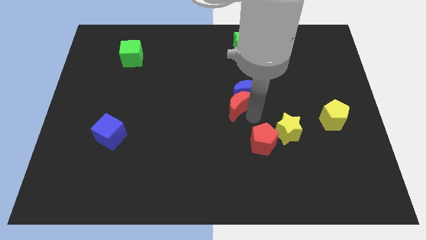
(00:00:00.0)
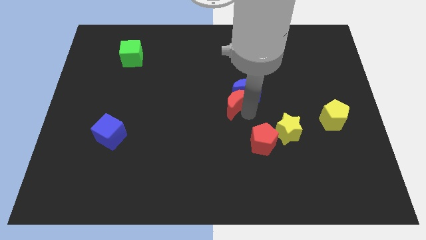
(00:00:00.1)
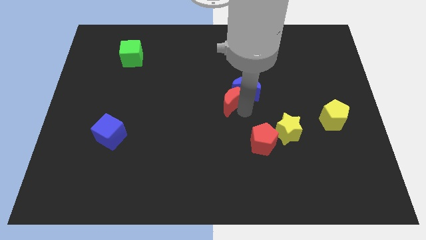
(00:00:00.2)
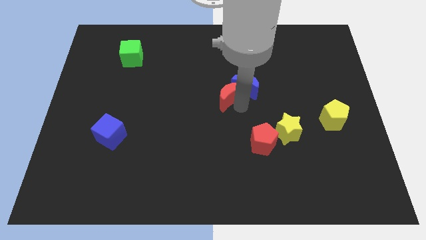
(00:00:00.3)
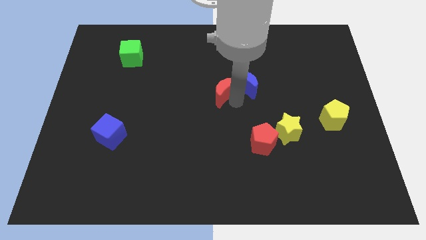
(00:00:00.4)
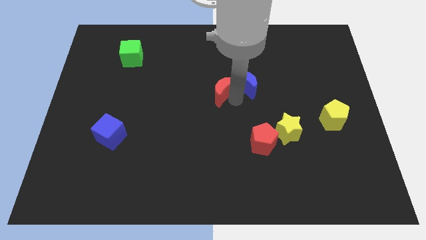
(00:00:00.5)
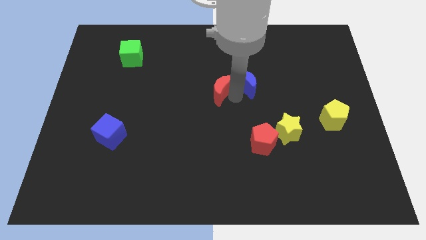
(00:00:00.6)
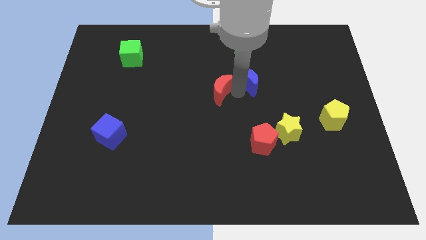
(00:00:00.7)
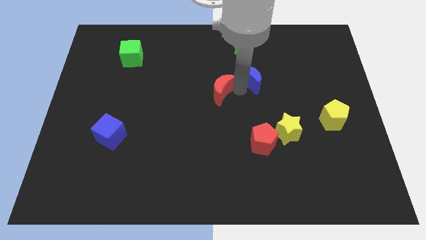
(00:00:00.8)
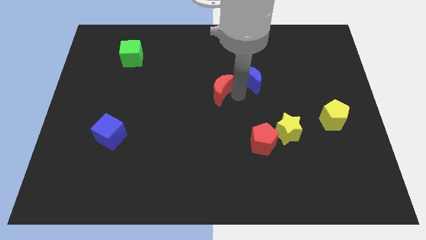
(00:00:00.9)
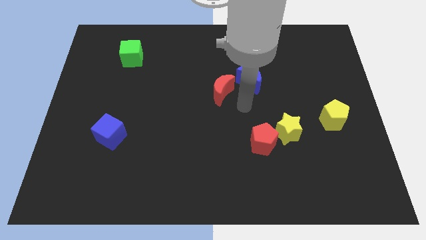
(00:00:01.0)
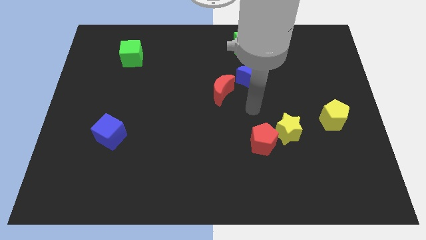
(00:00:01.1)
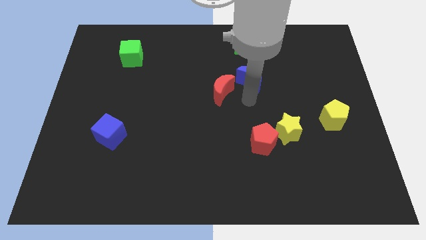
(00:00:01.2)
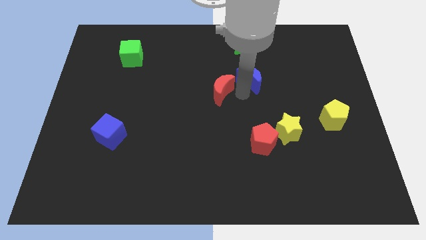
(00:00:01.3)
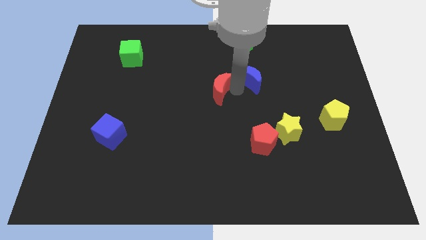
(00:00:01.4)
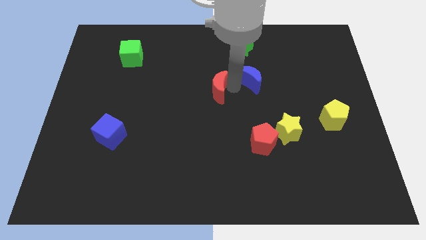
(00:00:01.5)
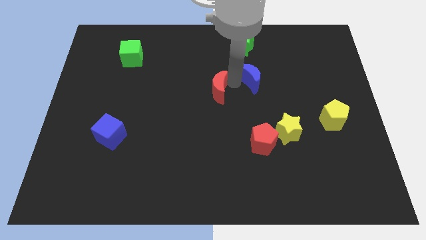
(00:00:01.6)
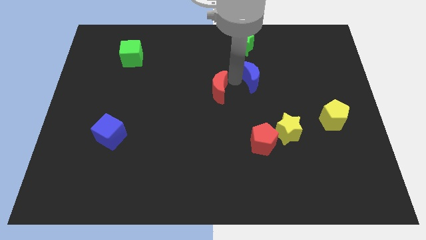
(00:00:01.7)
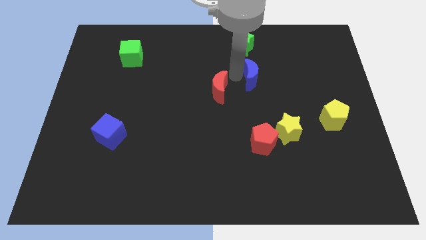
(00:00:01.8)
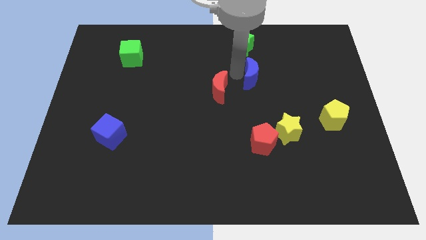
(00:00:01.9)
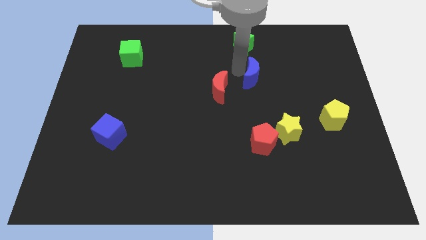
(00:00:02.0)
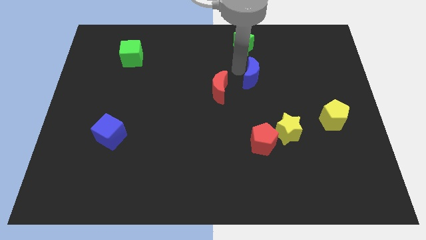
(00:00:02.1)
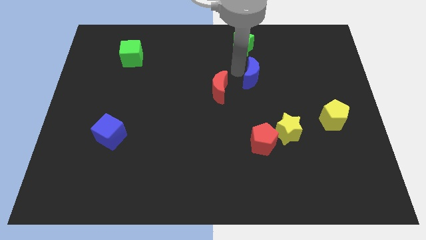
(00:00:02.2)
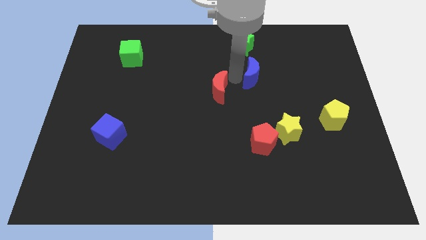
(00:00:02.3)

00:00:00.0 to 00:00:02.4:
separate the red moon and blue moon

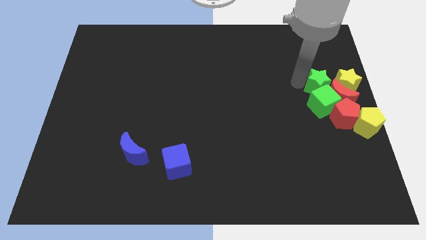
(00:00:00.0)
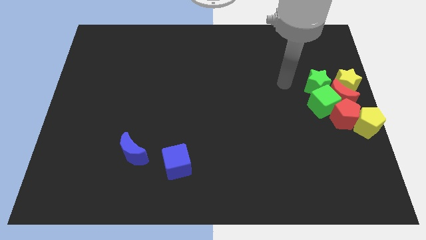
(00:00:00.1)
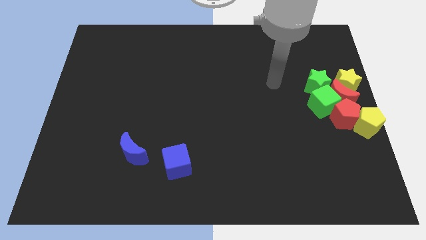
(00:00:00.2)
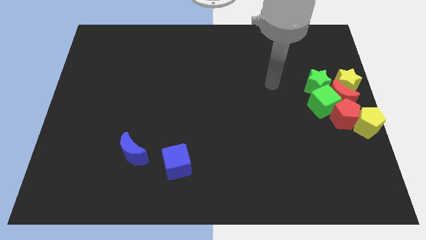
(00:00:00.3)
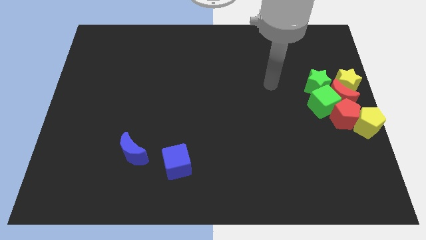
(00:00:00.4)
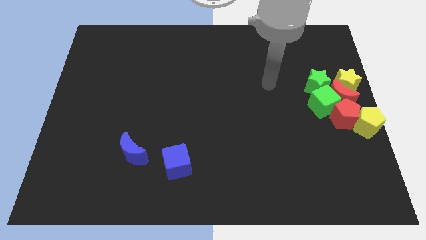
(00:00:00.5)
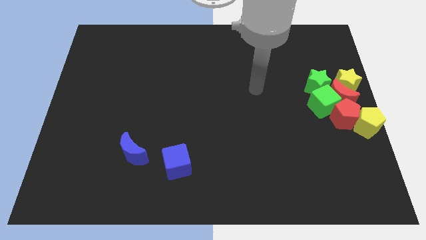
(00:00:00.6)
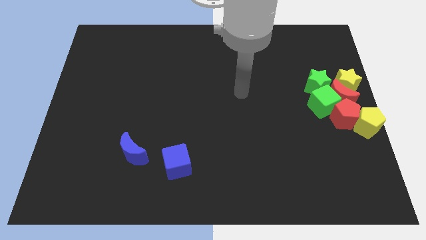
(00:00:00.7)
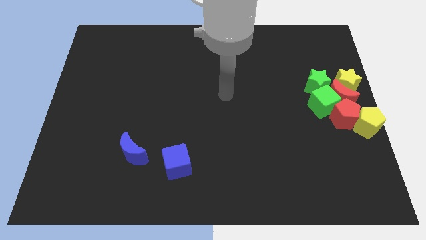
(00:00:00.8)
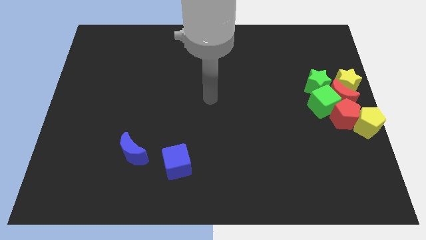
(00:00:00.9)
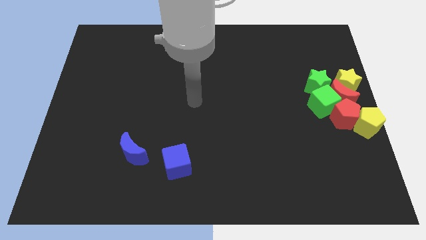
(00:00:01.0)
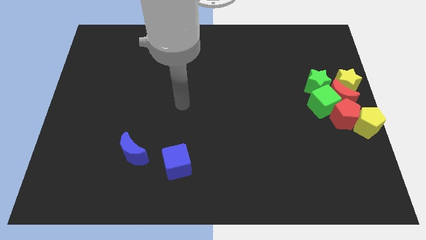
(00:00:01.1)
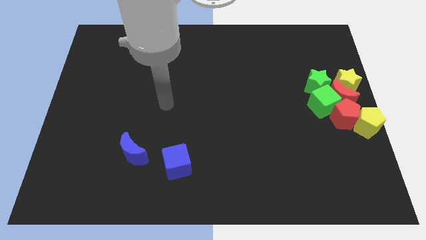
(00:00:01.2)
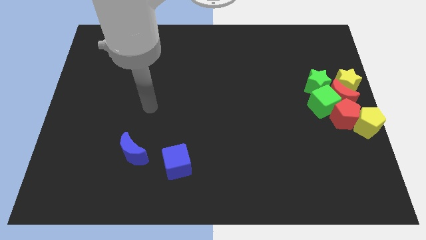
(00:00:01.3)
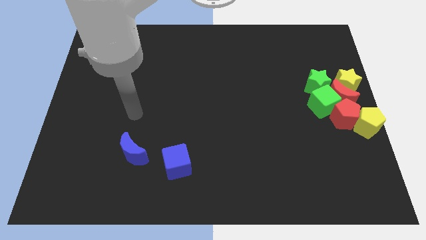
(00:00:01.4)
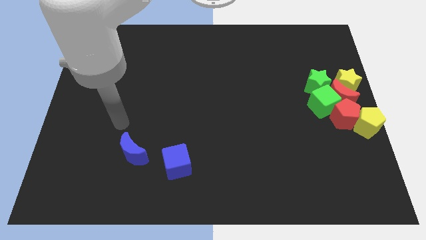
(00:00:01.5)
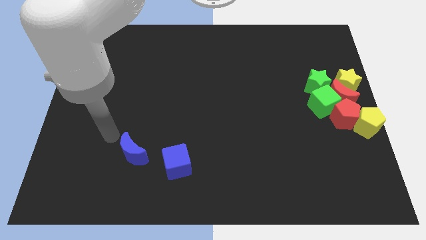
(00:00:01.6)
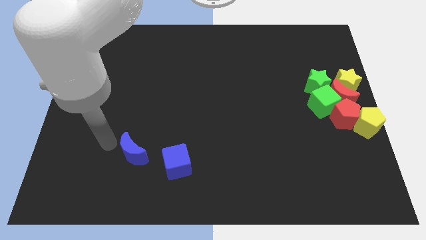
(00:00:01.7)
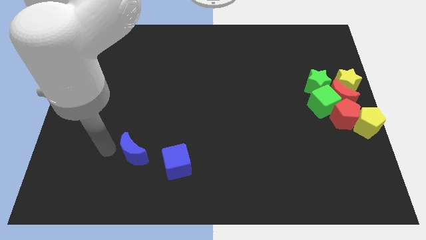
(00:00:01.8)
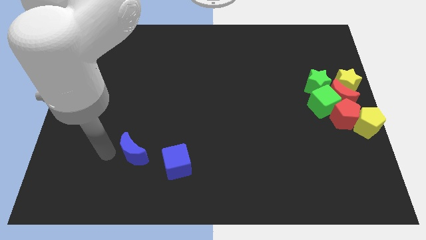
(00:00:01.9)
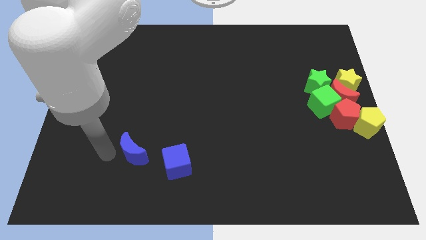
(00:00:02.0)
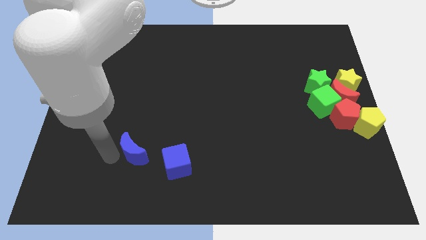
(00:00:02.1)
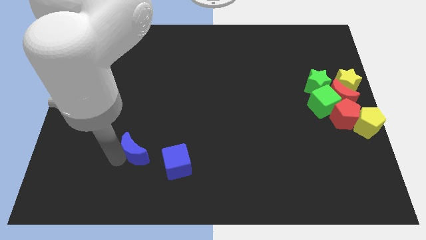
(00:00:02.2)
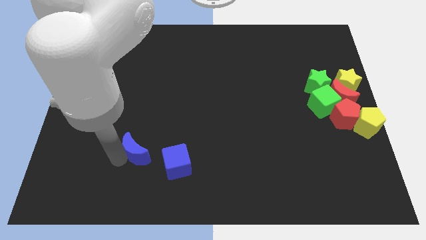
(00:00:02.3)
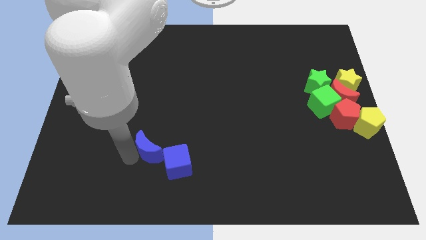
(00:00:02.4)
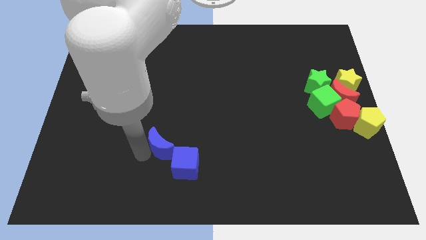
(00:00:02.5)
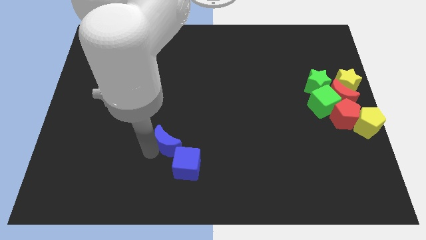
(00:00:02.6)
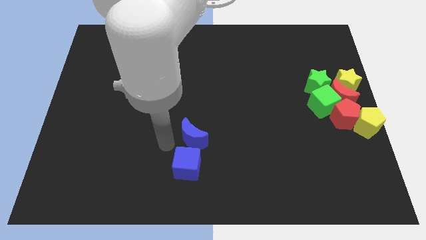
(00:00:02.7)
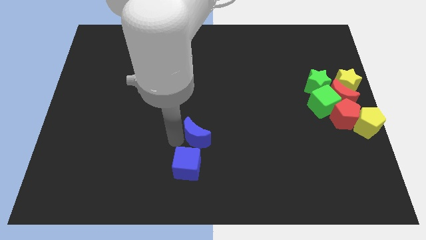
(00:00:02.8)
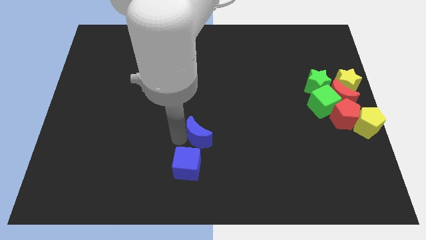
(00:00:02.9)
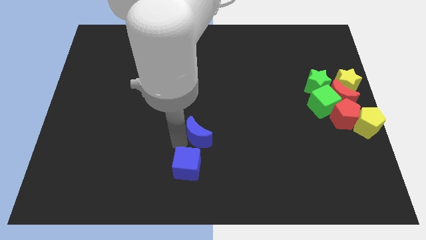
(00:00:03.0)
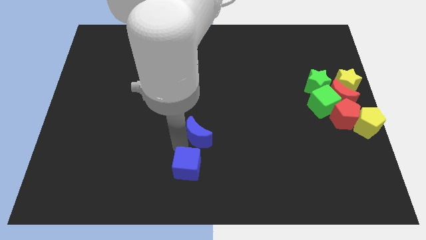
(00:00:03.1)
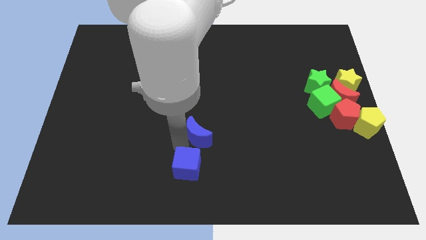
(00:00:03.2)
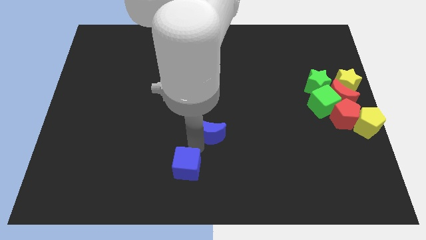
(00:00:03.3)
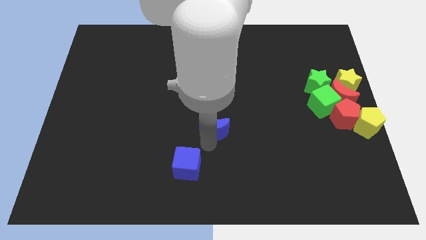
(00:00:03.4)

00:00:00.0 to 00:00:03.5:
move blue moon diagonally top right to the blue cube

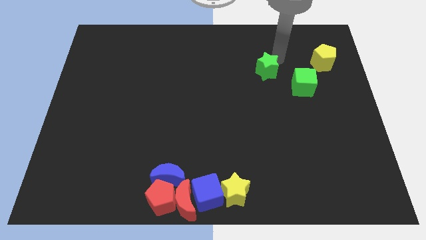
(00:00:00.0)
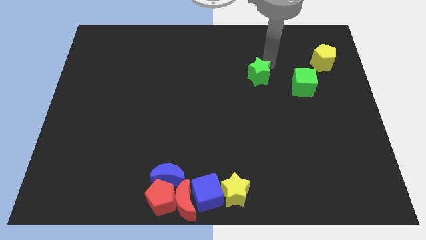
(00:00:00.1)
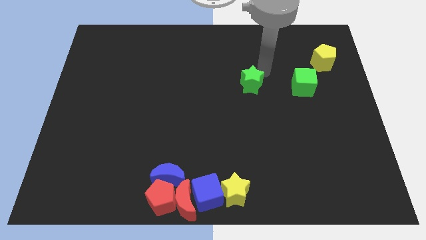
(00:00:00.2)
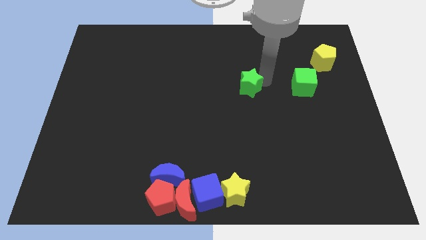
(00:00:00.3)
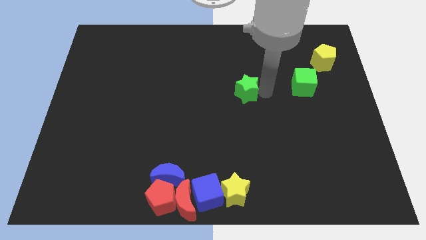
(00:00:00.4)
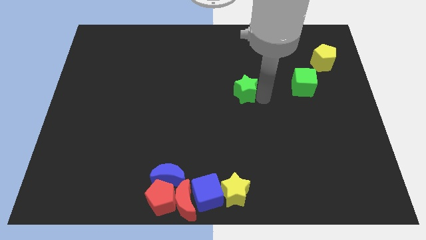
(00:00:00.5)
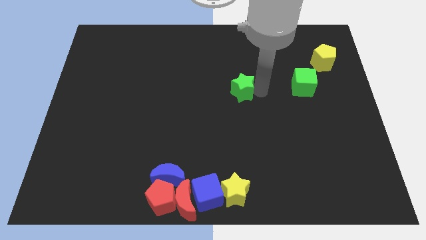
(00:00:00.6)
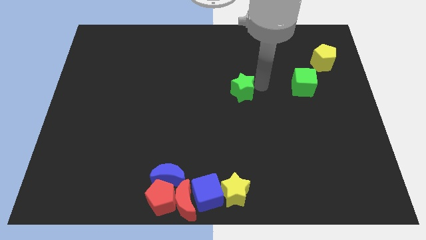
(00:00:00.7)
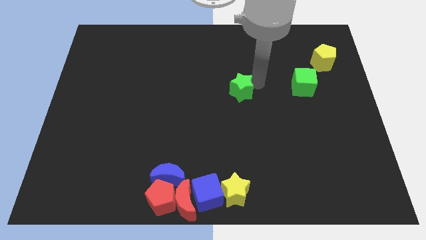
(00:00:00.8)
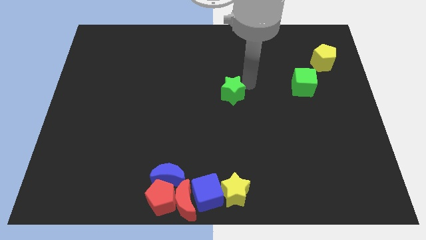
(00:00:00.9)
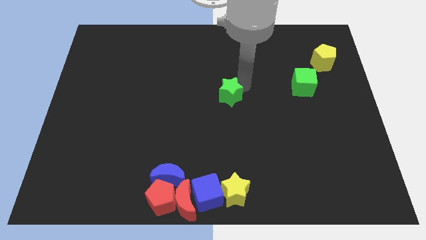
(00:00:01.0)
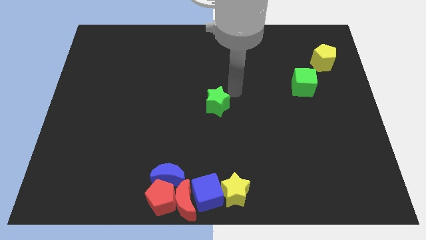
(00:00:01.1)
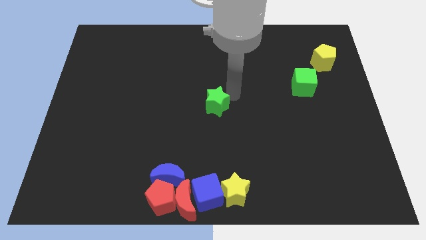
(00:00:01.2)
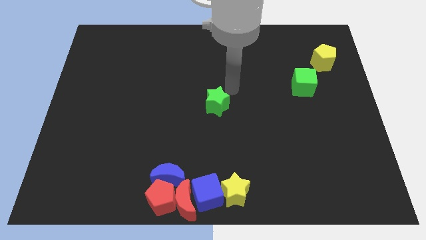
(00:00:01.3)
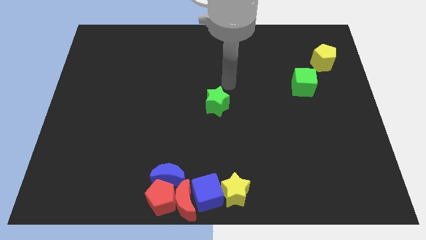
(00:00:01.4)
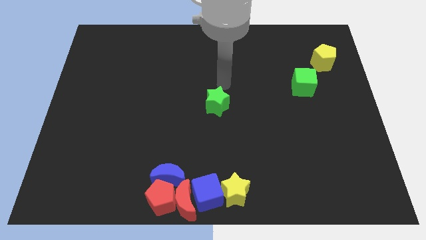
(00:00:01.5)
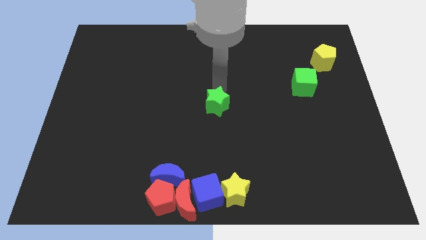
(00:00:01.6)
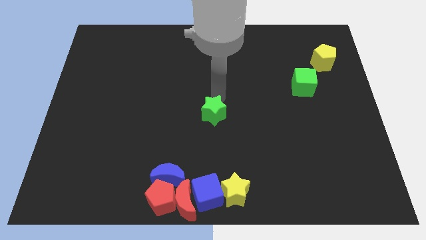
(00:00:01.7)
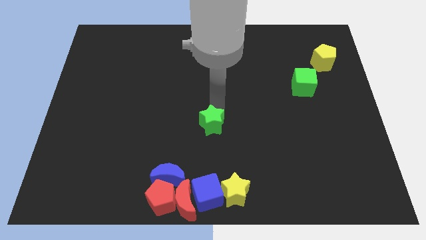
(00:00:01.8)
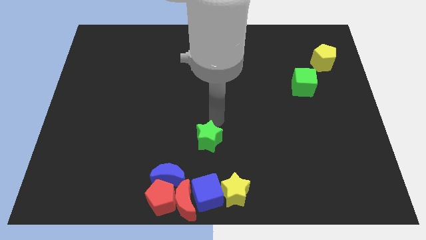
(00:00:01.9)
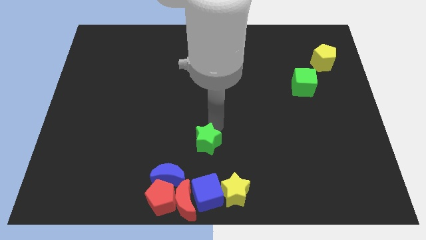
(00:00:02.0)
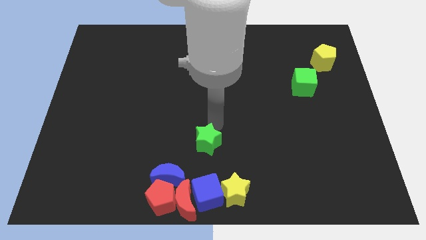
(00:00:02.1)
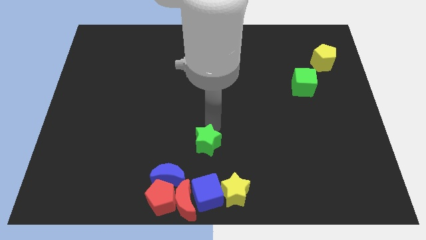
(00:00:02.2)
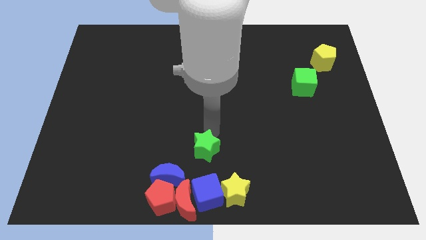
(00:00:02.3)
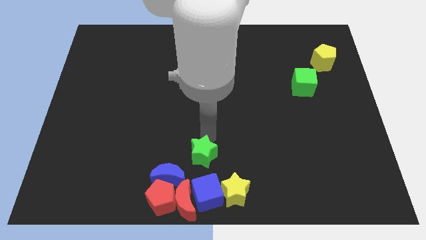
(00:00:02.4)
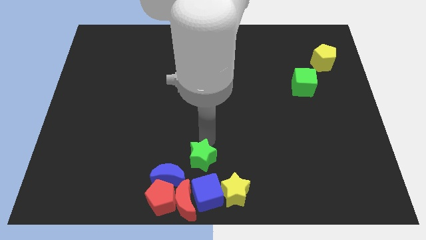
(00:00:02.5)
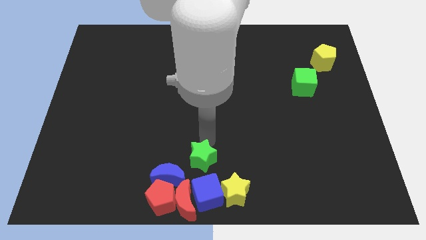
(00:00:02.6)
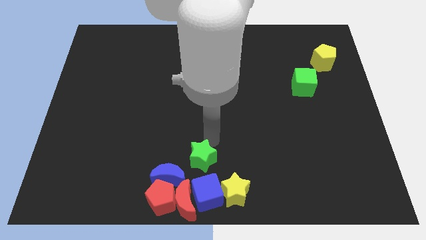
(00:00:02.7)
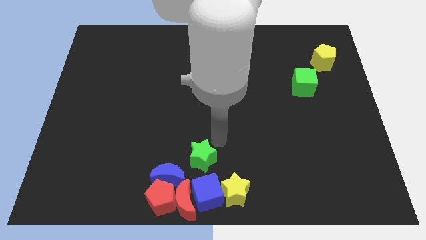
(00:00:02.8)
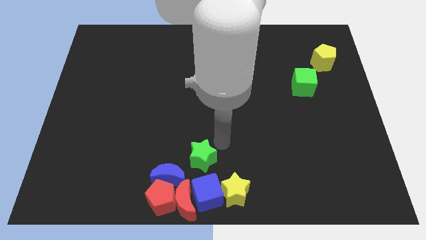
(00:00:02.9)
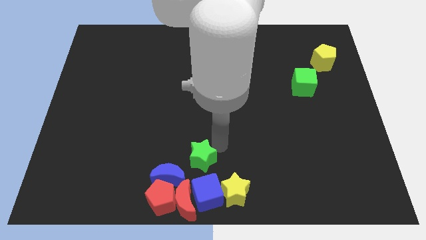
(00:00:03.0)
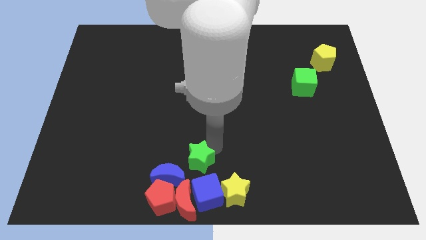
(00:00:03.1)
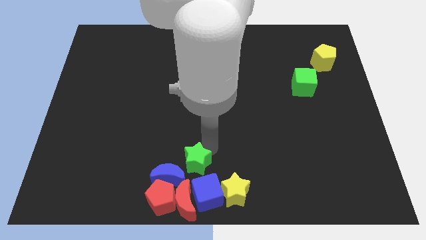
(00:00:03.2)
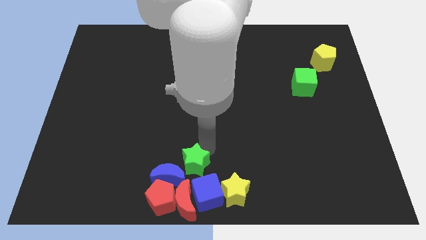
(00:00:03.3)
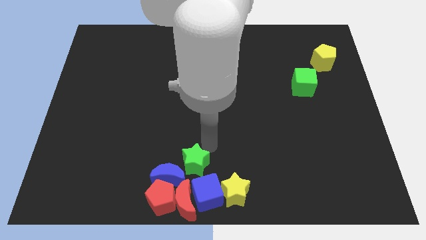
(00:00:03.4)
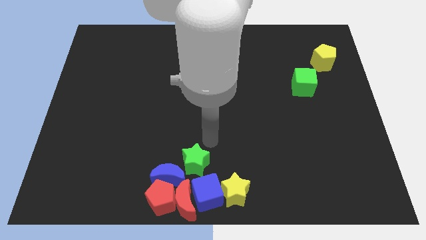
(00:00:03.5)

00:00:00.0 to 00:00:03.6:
slide the green star towards the bottom center
